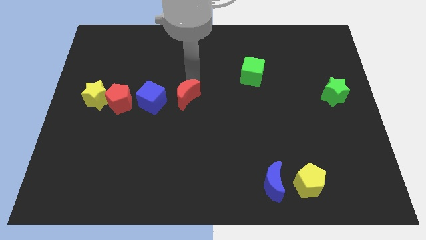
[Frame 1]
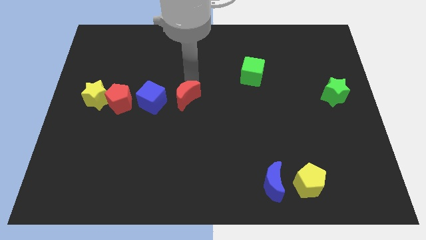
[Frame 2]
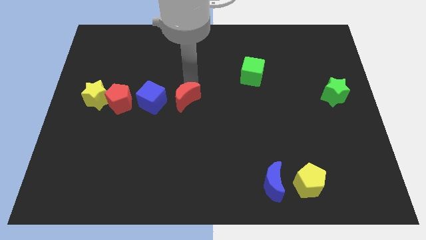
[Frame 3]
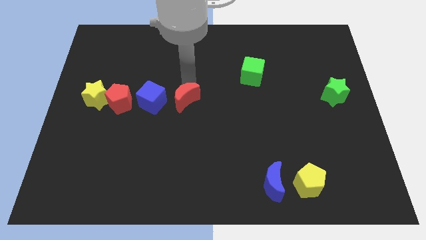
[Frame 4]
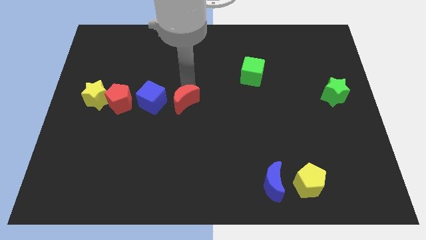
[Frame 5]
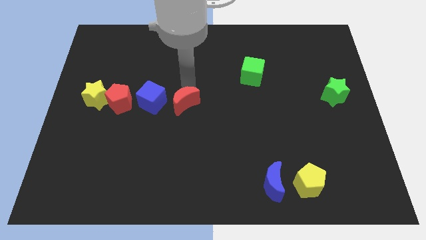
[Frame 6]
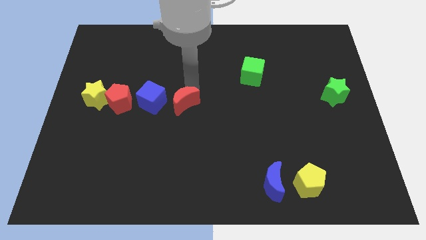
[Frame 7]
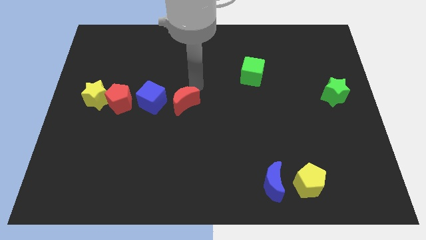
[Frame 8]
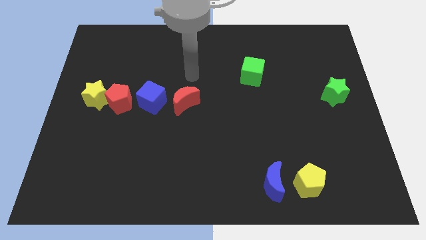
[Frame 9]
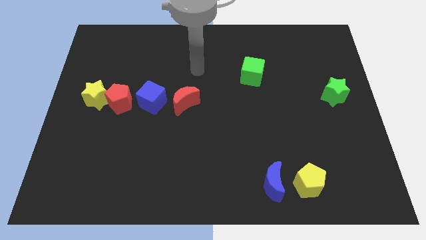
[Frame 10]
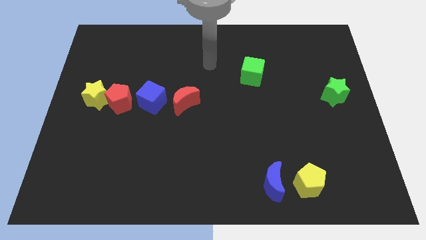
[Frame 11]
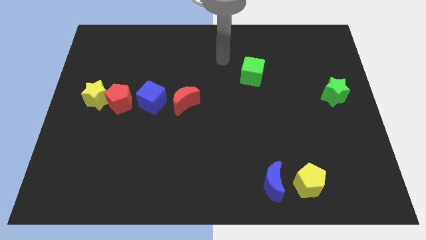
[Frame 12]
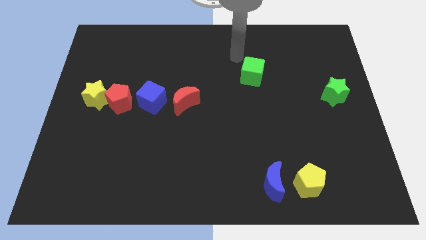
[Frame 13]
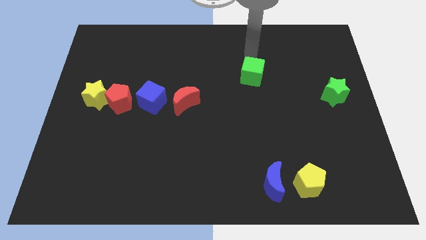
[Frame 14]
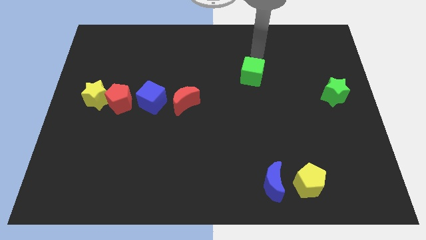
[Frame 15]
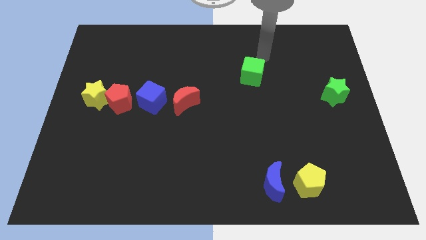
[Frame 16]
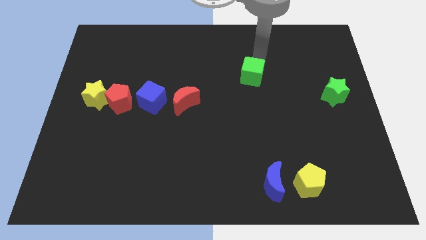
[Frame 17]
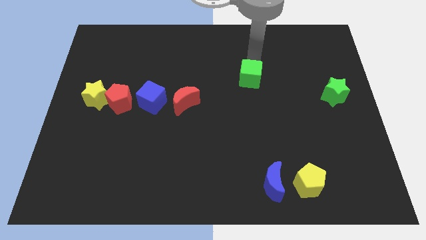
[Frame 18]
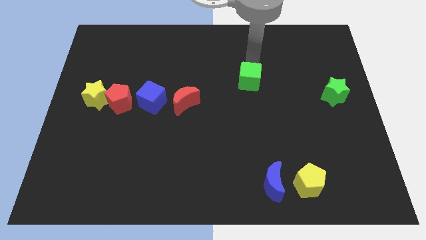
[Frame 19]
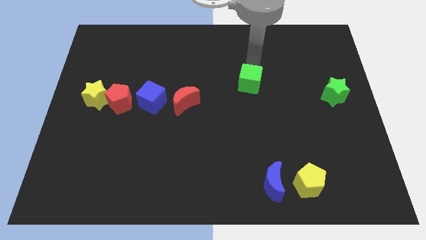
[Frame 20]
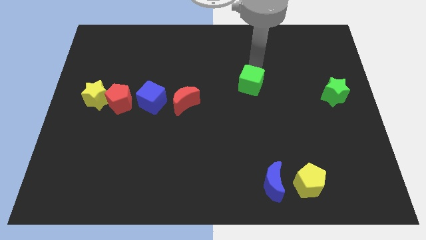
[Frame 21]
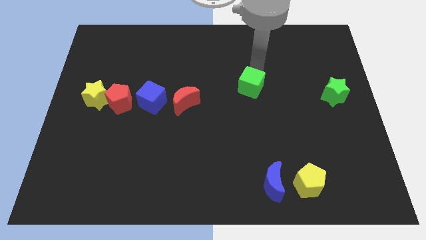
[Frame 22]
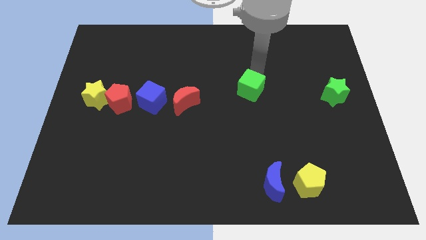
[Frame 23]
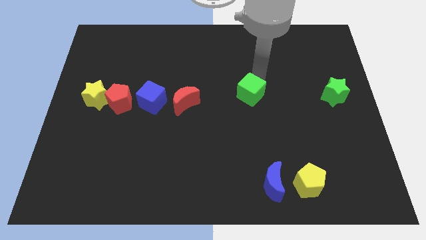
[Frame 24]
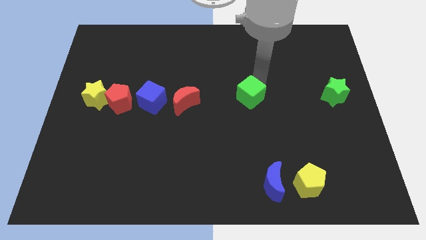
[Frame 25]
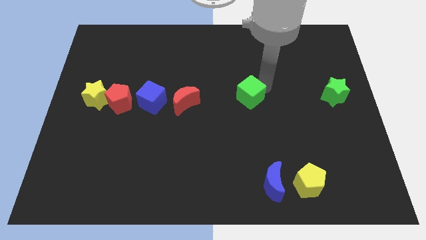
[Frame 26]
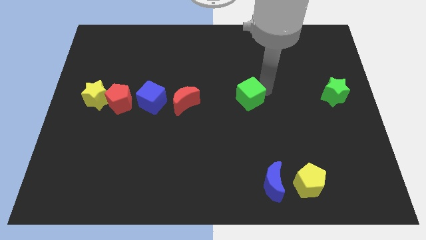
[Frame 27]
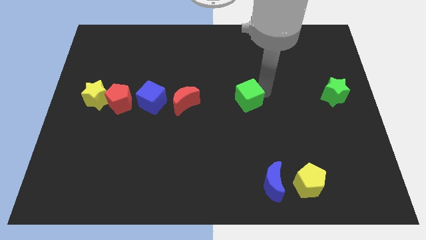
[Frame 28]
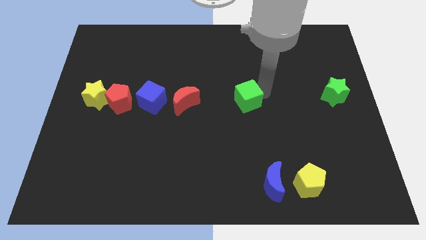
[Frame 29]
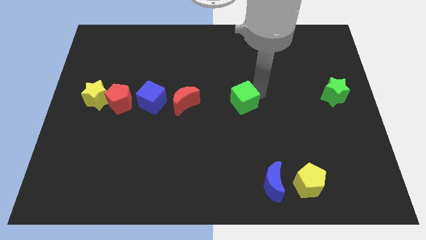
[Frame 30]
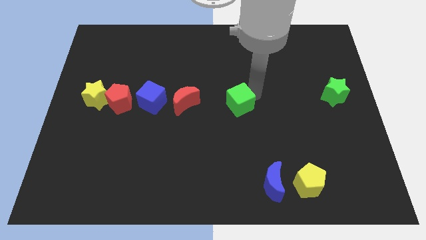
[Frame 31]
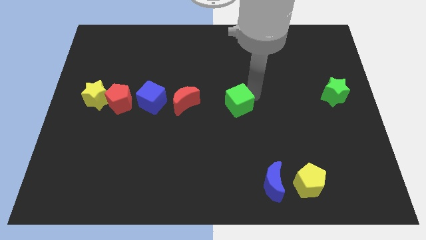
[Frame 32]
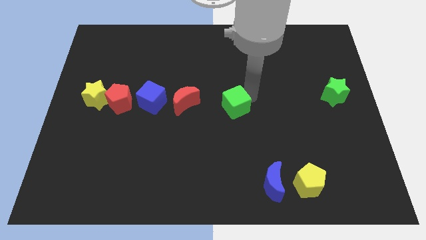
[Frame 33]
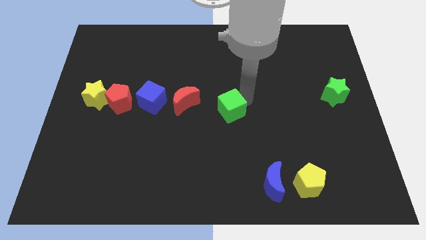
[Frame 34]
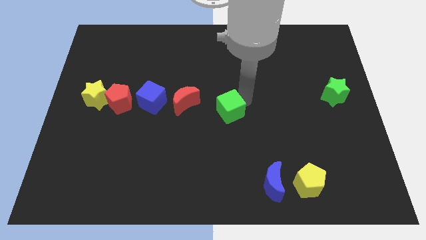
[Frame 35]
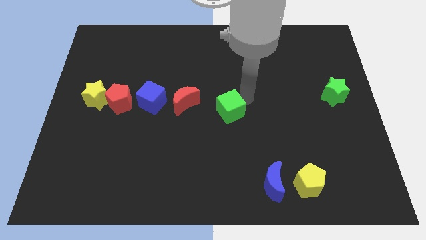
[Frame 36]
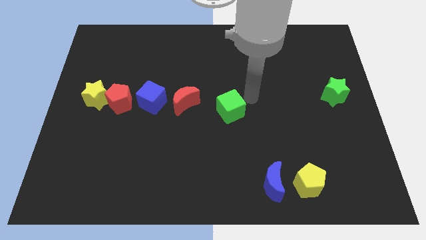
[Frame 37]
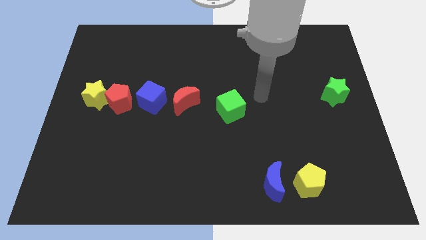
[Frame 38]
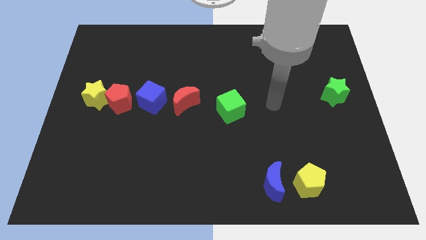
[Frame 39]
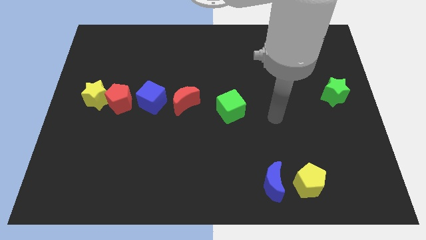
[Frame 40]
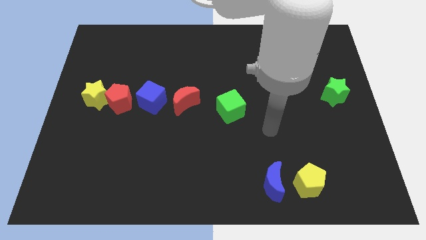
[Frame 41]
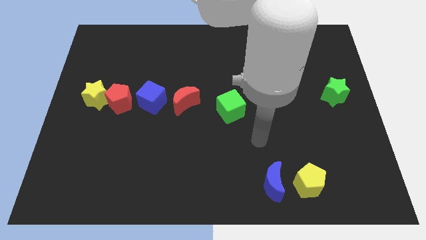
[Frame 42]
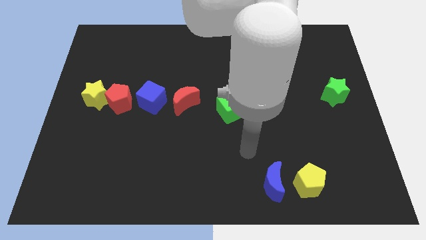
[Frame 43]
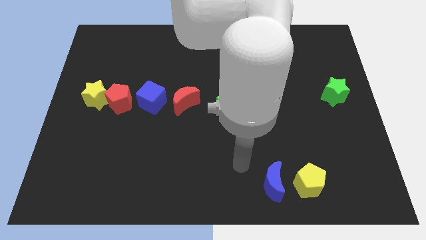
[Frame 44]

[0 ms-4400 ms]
drag the green cube slightly downwards

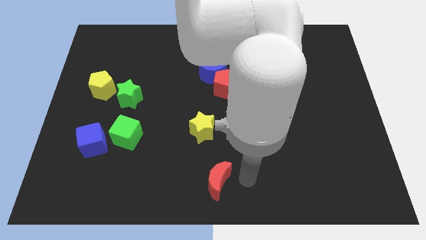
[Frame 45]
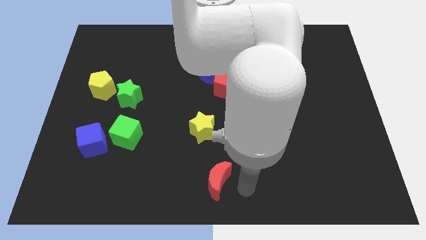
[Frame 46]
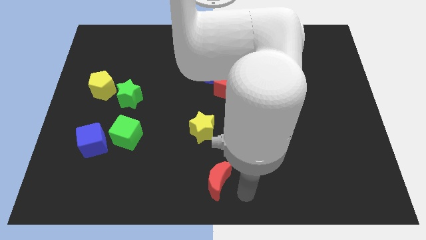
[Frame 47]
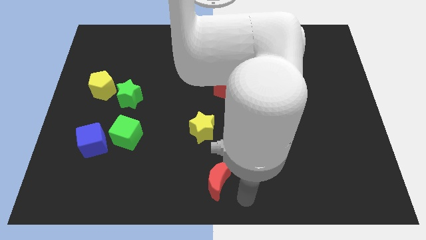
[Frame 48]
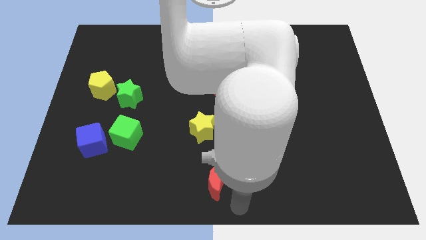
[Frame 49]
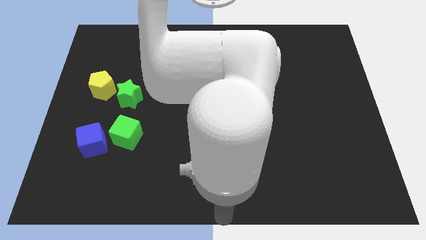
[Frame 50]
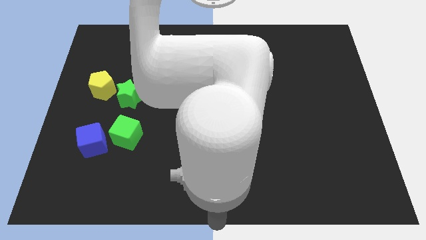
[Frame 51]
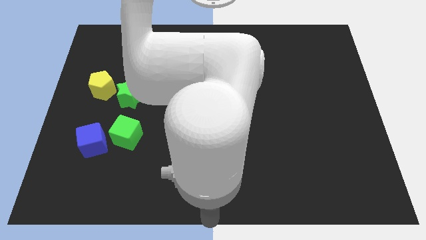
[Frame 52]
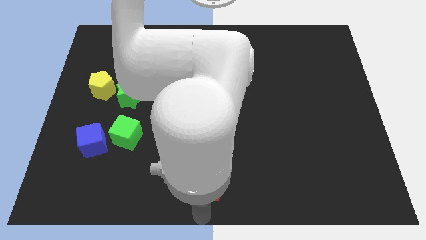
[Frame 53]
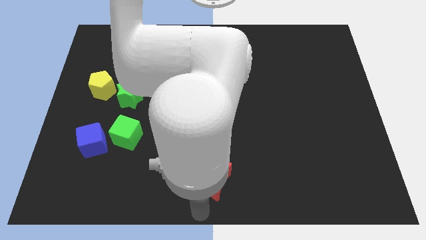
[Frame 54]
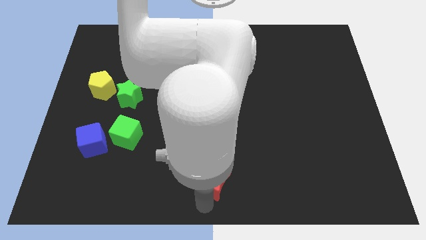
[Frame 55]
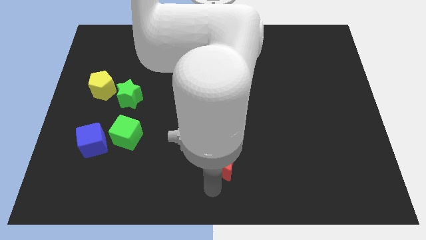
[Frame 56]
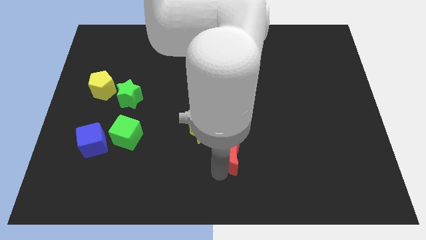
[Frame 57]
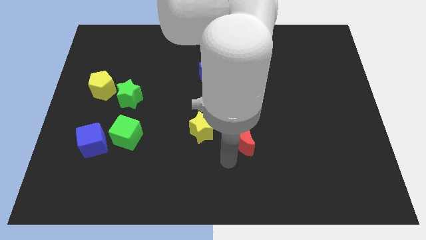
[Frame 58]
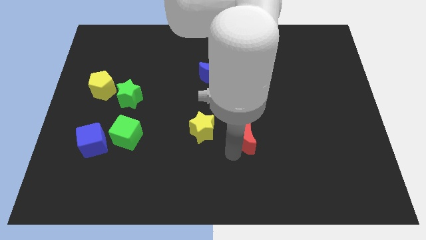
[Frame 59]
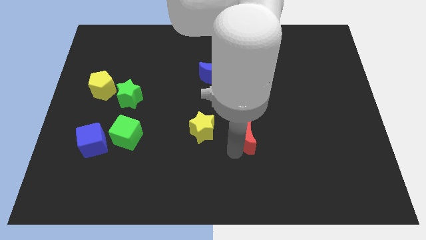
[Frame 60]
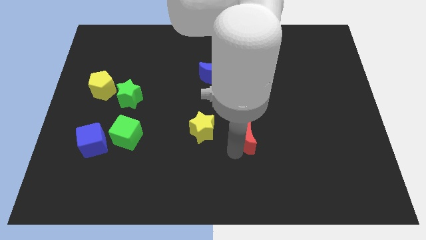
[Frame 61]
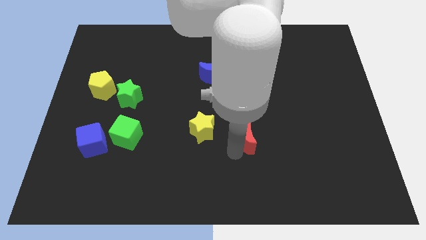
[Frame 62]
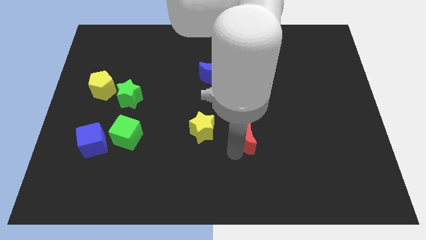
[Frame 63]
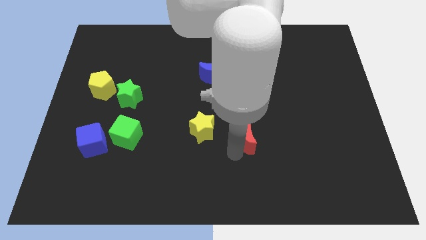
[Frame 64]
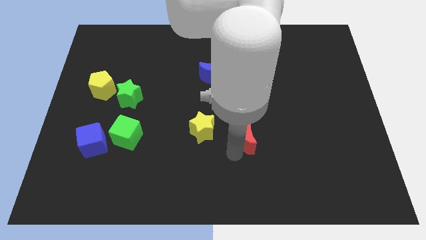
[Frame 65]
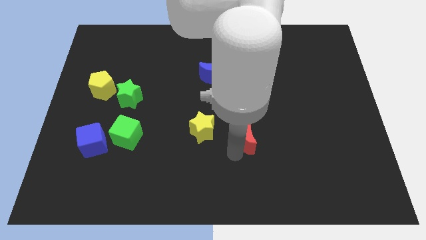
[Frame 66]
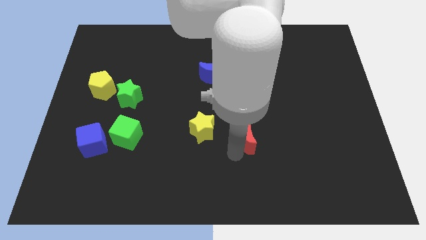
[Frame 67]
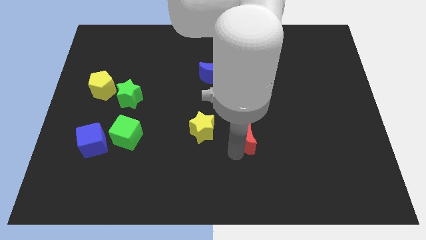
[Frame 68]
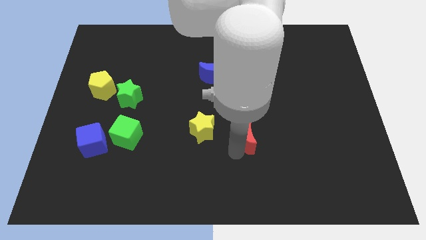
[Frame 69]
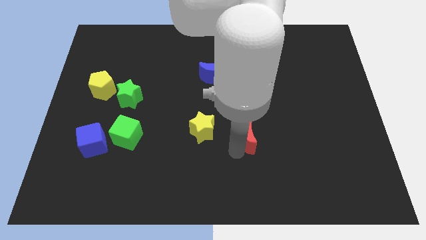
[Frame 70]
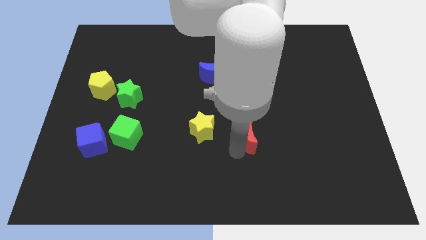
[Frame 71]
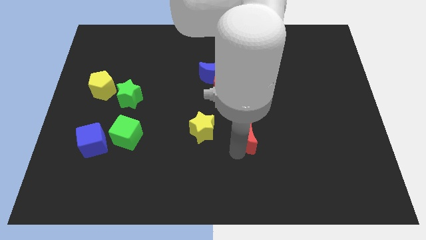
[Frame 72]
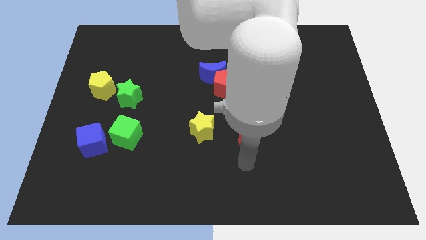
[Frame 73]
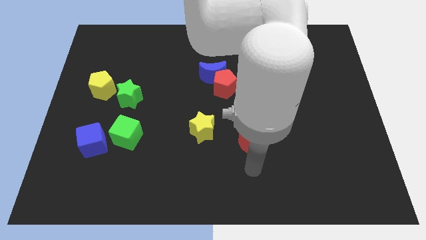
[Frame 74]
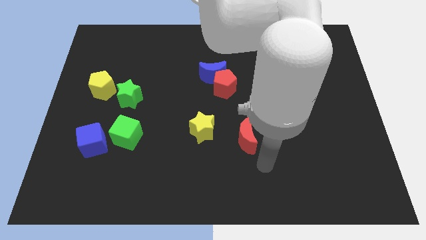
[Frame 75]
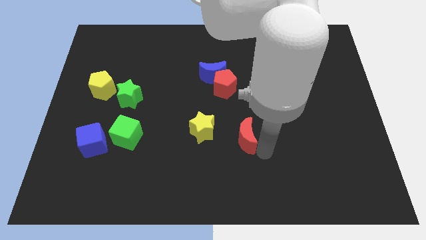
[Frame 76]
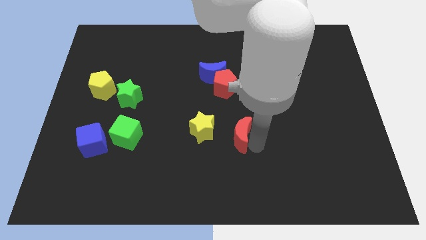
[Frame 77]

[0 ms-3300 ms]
push the red crescent to the right side of the yellow star

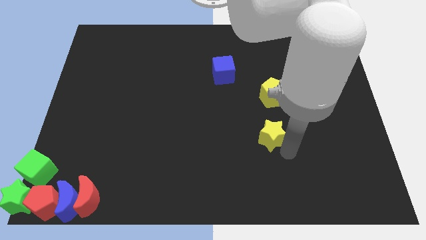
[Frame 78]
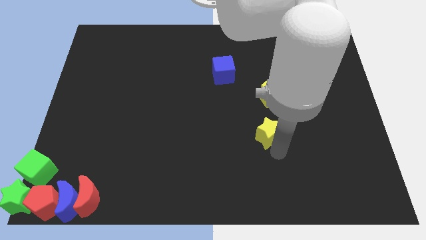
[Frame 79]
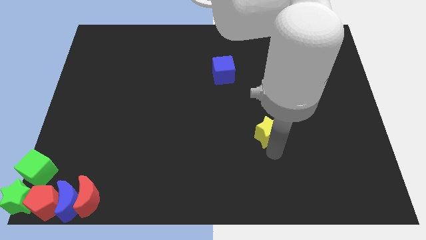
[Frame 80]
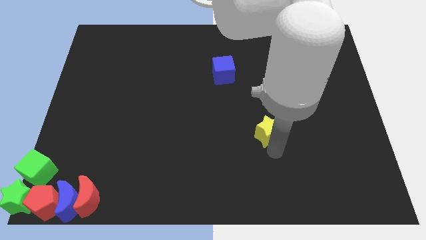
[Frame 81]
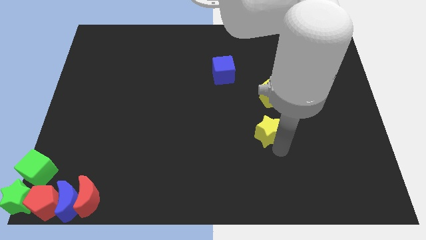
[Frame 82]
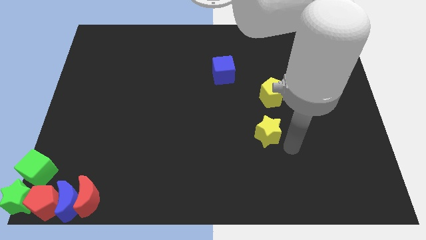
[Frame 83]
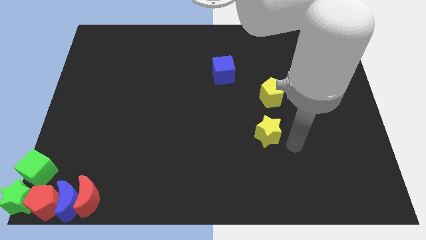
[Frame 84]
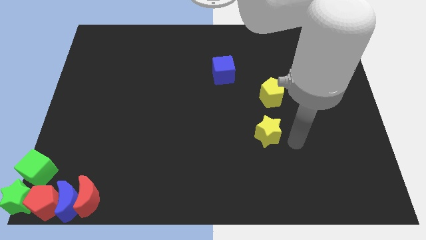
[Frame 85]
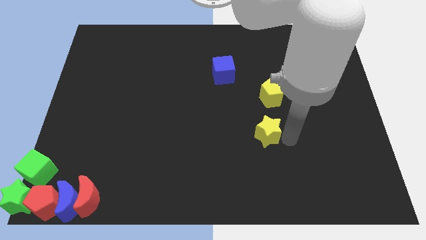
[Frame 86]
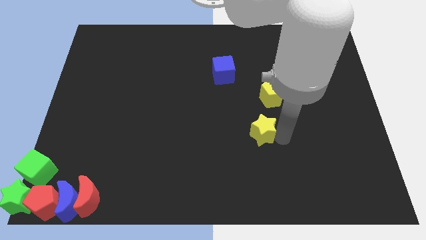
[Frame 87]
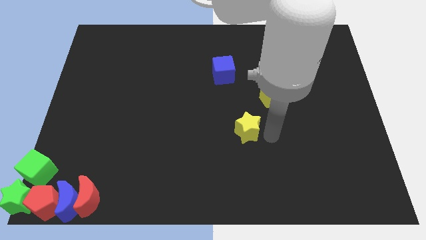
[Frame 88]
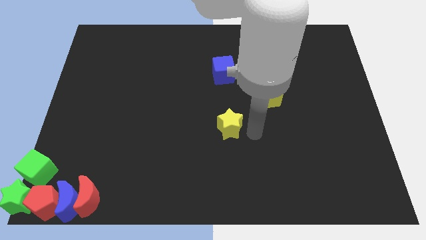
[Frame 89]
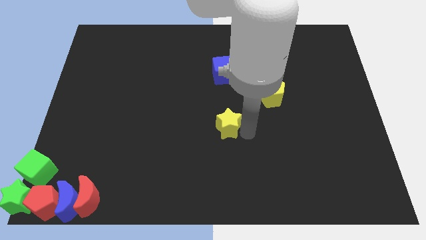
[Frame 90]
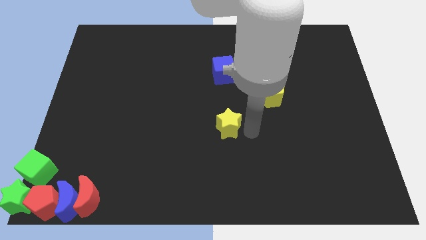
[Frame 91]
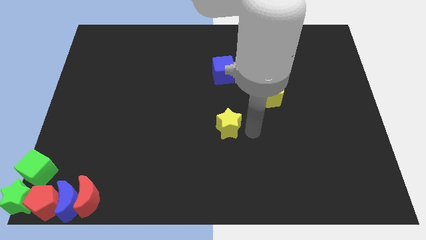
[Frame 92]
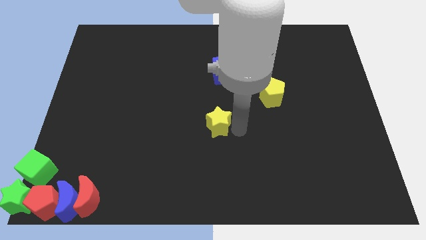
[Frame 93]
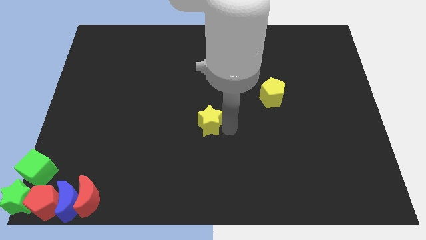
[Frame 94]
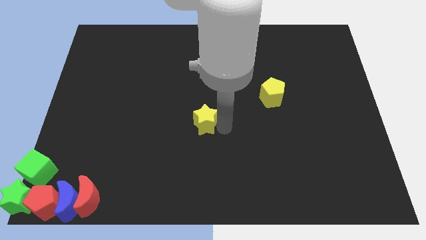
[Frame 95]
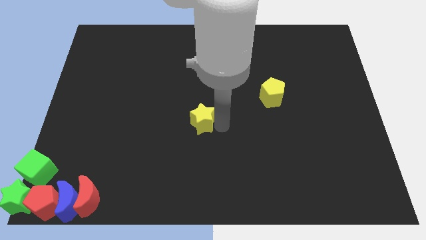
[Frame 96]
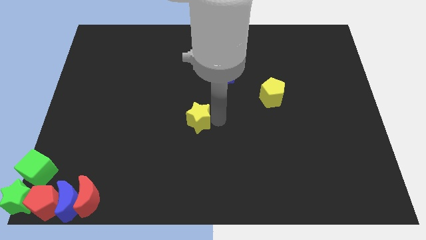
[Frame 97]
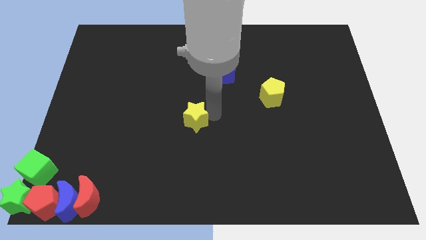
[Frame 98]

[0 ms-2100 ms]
move the yellow star to the left side of the board
